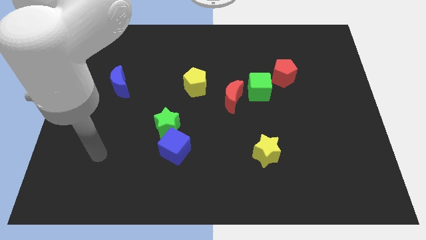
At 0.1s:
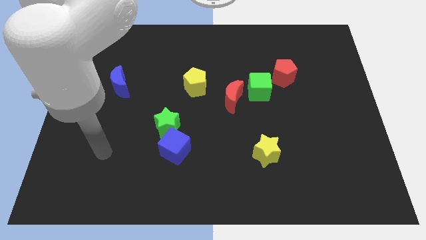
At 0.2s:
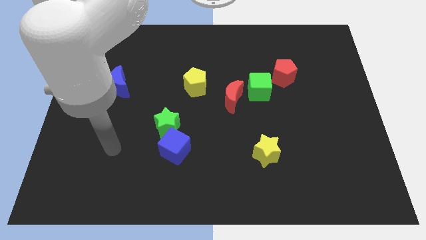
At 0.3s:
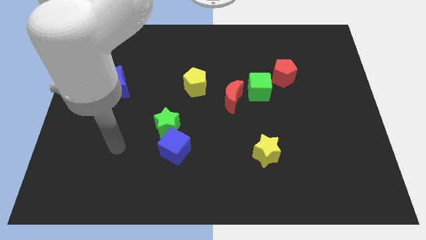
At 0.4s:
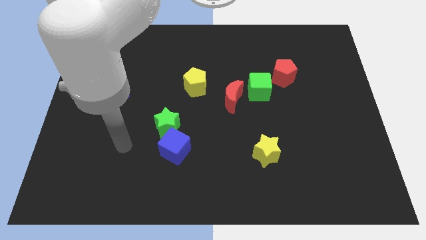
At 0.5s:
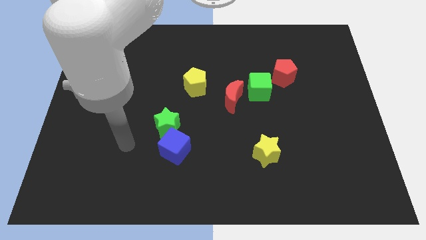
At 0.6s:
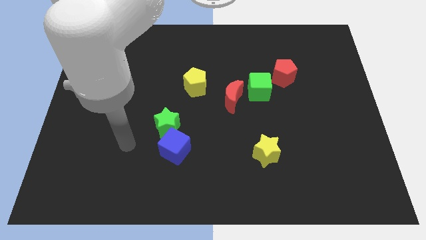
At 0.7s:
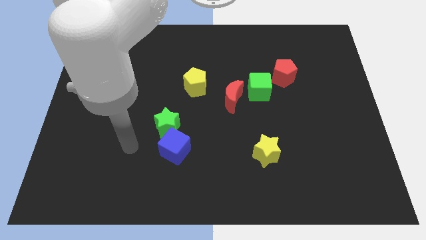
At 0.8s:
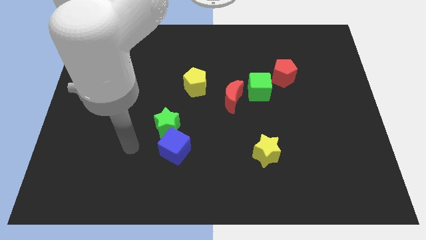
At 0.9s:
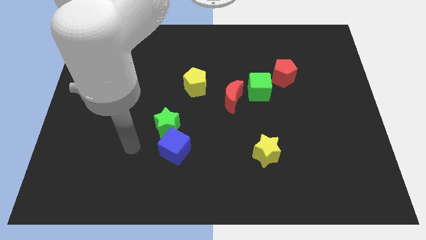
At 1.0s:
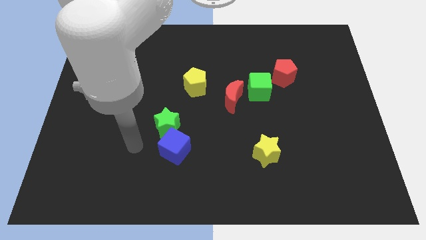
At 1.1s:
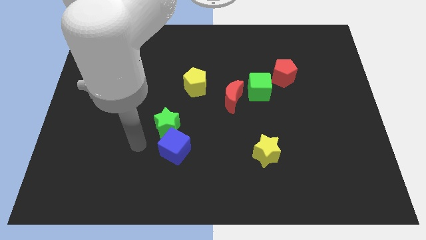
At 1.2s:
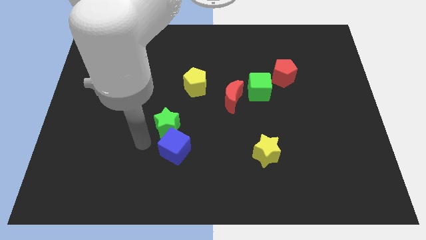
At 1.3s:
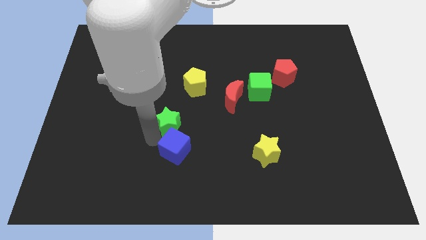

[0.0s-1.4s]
move your arm to the bottom left of the green star

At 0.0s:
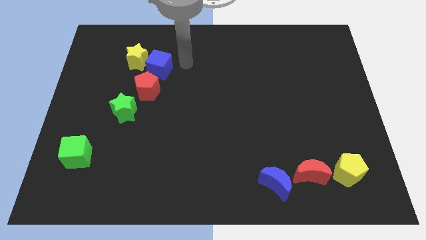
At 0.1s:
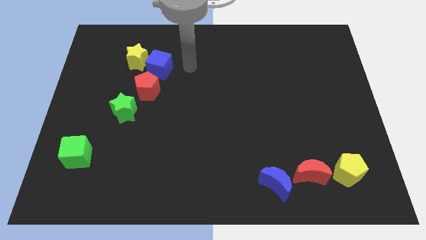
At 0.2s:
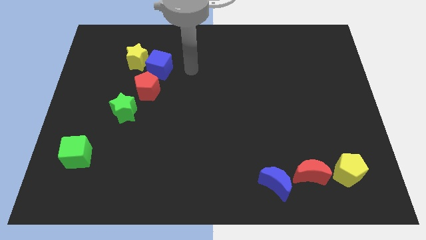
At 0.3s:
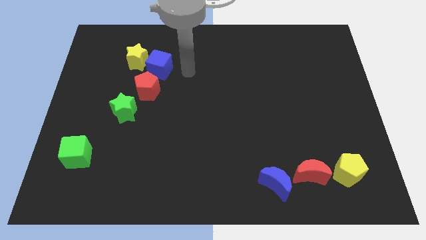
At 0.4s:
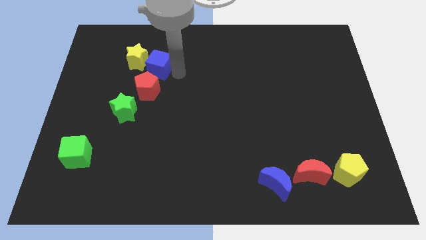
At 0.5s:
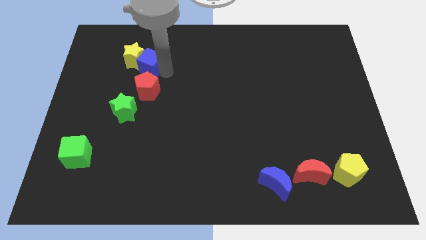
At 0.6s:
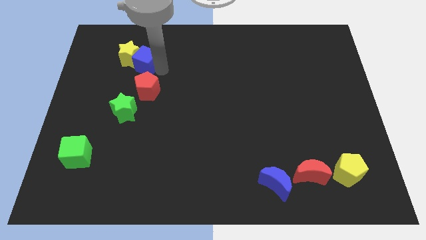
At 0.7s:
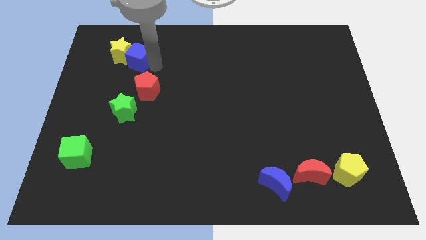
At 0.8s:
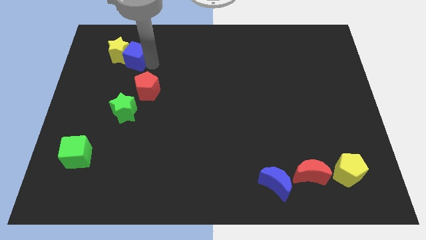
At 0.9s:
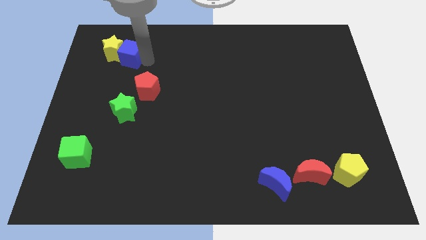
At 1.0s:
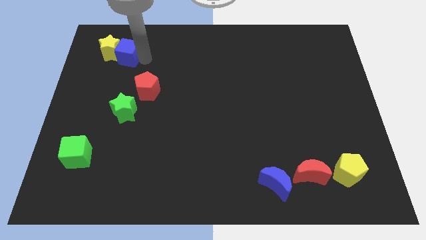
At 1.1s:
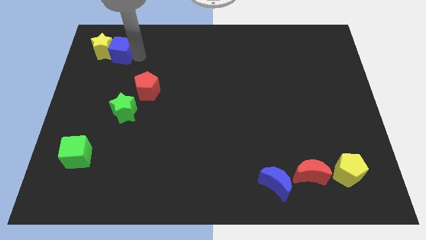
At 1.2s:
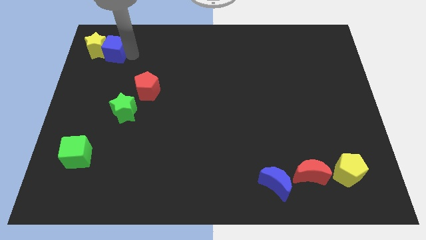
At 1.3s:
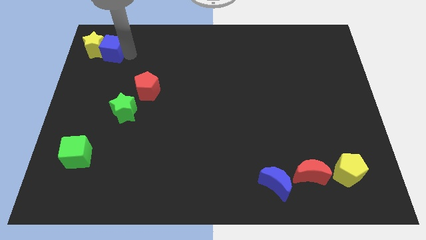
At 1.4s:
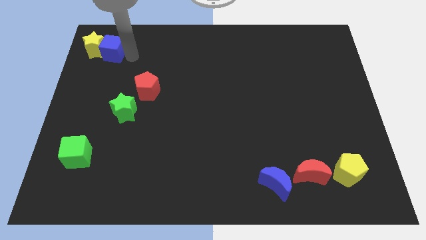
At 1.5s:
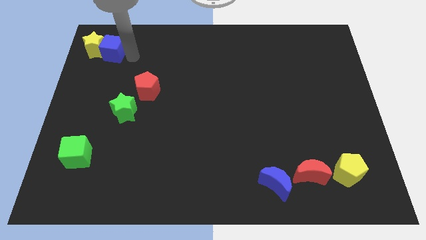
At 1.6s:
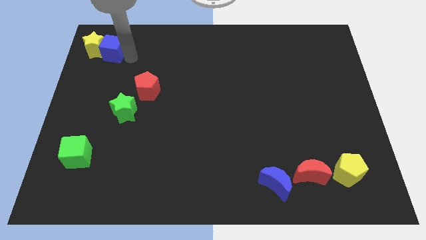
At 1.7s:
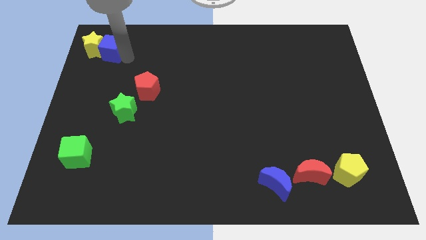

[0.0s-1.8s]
push yellow star with blue cube

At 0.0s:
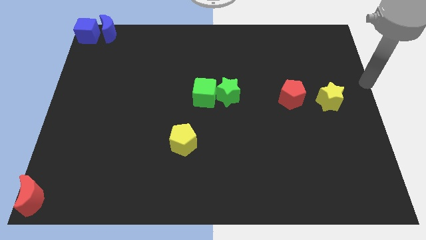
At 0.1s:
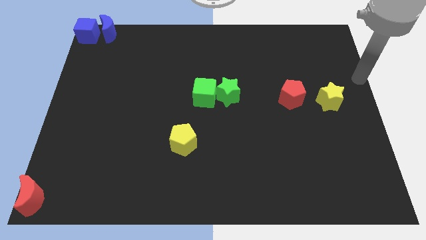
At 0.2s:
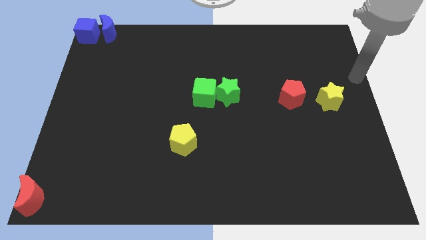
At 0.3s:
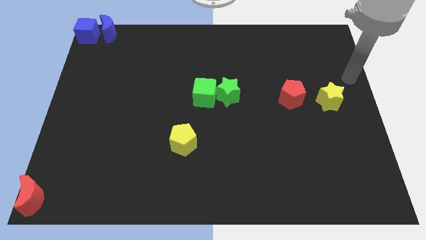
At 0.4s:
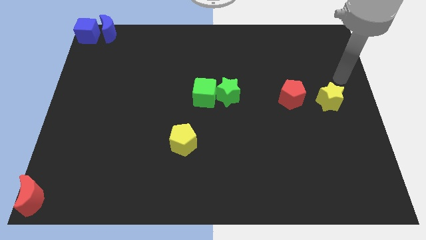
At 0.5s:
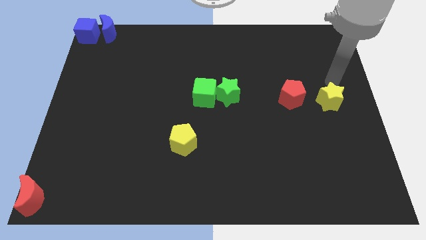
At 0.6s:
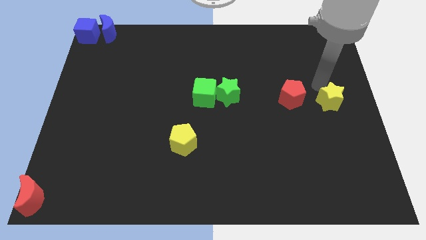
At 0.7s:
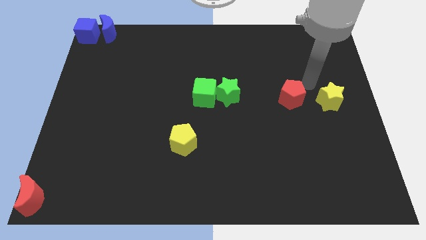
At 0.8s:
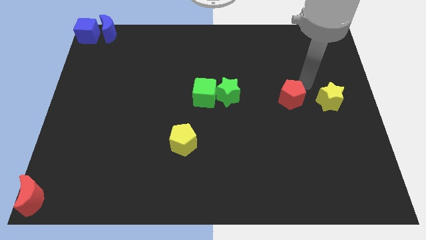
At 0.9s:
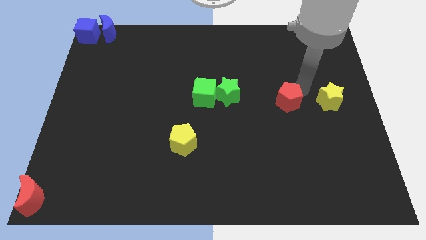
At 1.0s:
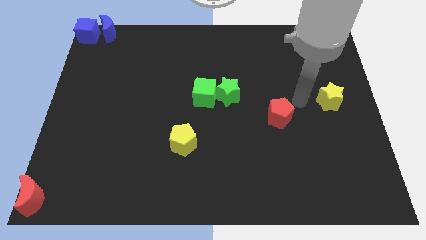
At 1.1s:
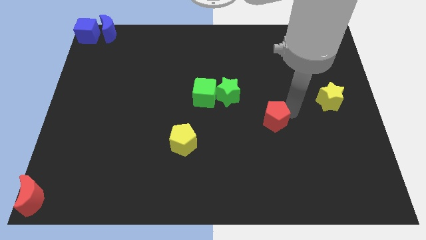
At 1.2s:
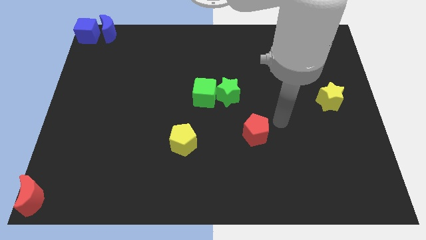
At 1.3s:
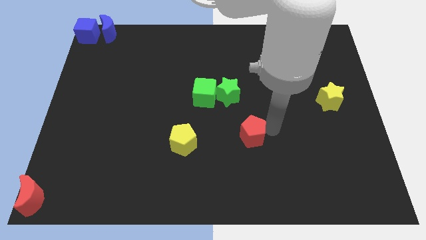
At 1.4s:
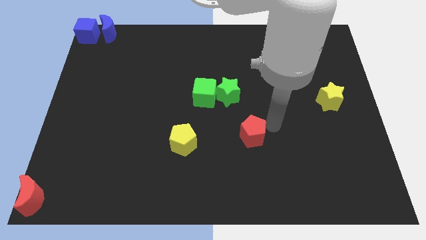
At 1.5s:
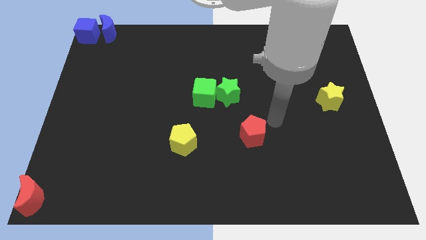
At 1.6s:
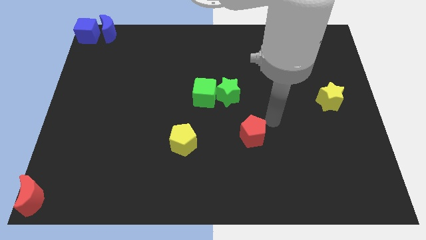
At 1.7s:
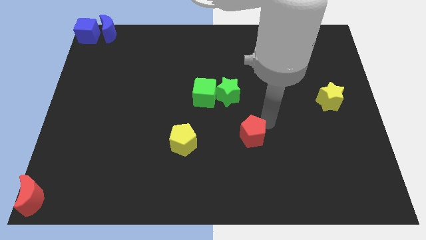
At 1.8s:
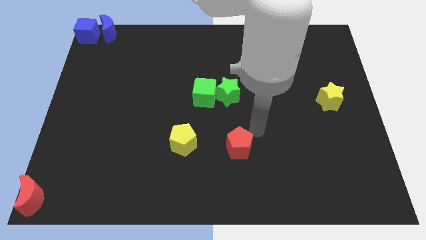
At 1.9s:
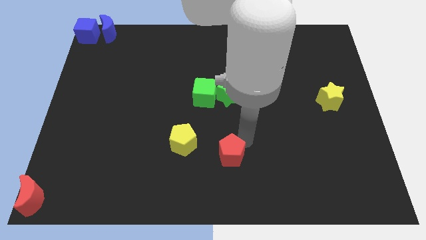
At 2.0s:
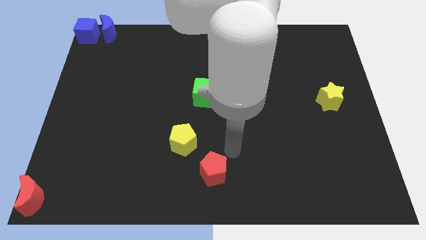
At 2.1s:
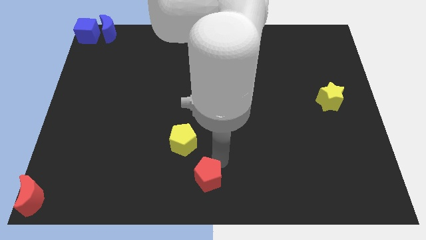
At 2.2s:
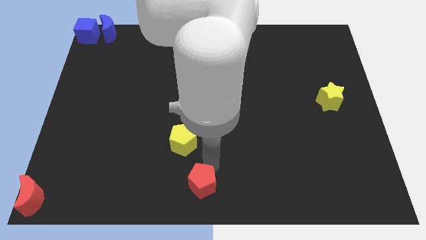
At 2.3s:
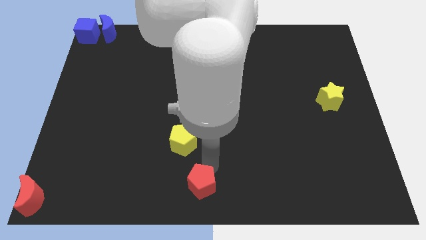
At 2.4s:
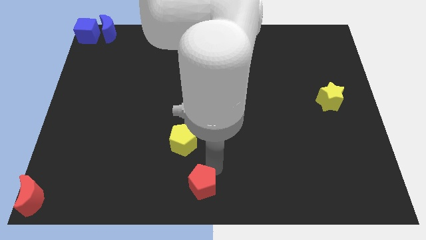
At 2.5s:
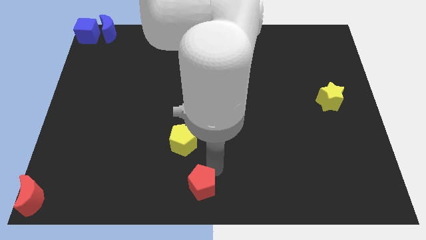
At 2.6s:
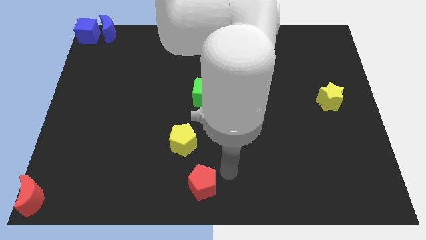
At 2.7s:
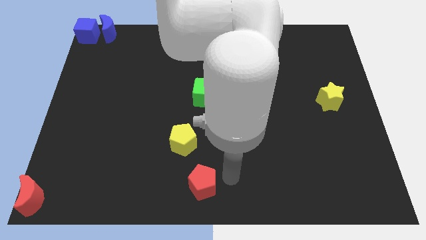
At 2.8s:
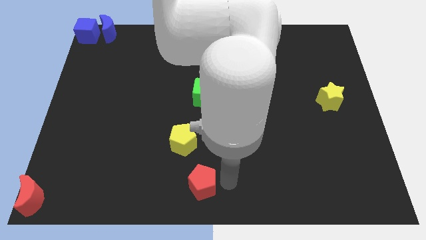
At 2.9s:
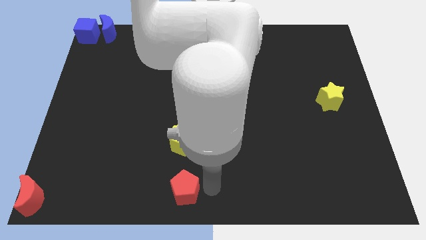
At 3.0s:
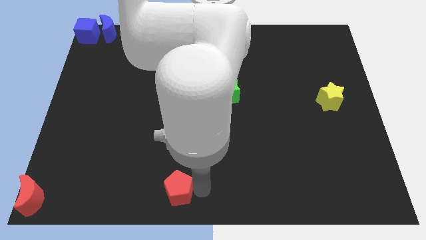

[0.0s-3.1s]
push the red pentagon to the bottom side of the yellow pentagon

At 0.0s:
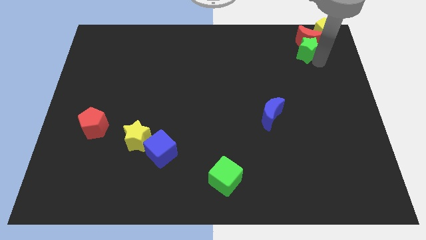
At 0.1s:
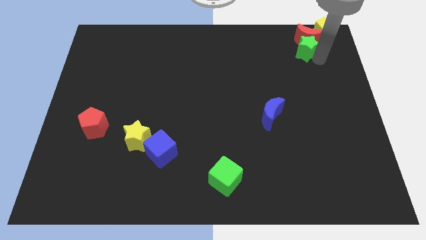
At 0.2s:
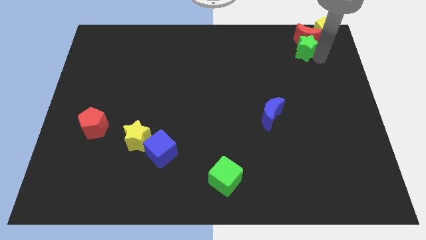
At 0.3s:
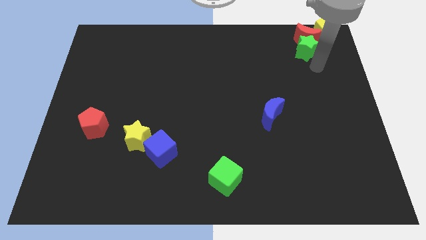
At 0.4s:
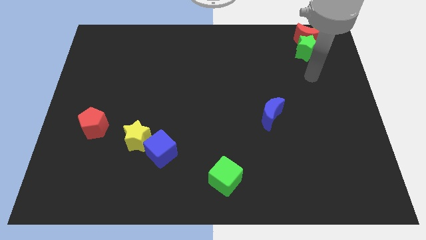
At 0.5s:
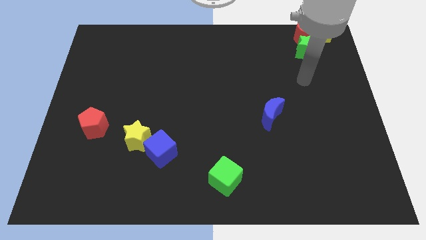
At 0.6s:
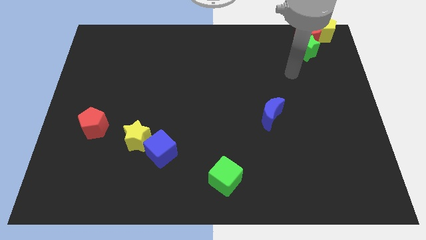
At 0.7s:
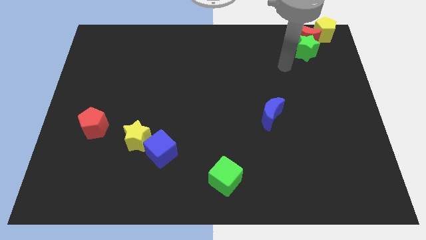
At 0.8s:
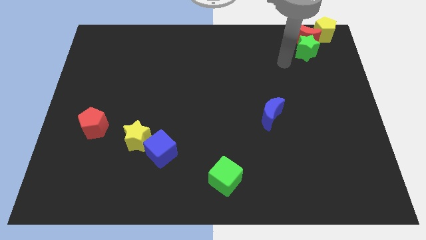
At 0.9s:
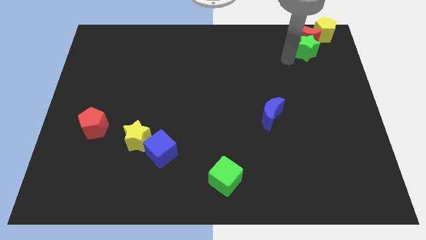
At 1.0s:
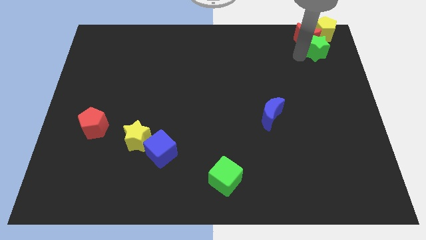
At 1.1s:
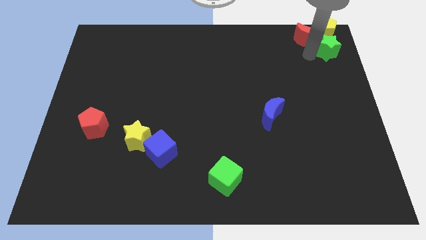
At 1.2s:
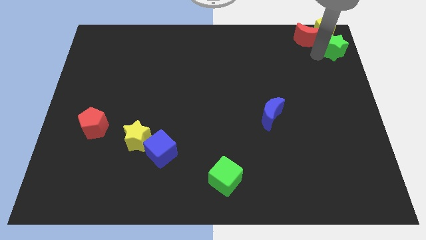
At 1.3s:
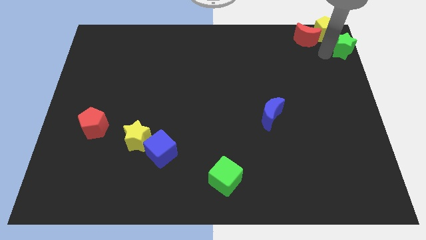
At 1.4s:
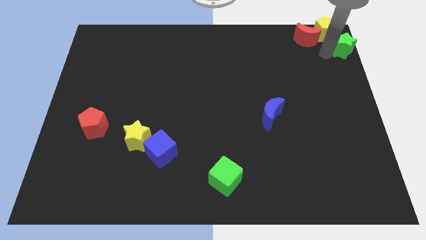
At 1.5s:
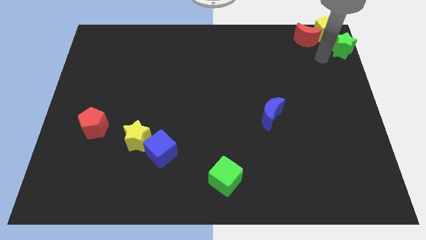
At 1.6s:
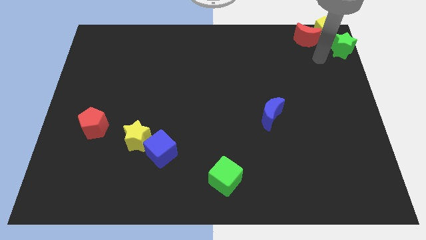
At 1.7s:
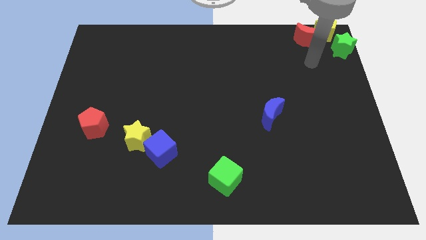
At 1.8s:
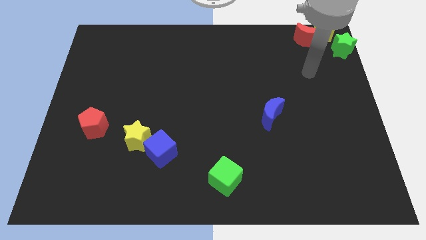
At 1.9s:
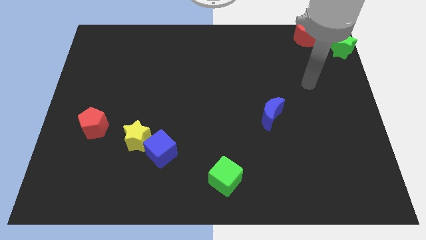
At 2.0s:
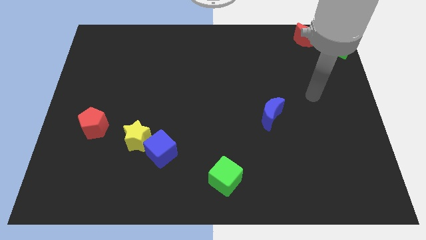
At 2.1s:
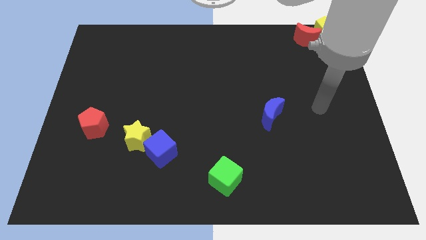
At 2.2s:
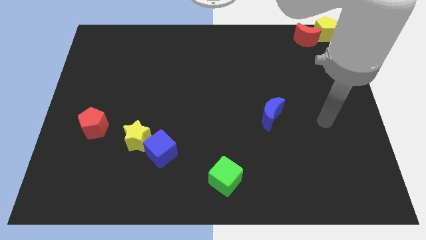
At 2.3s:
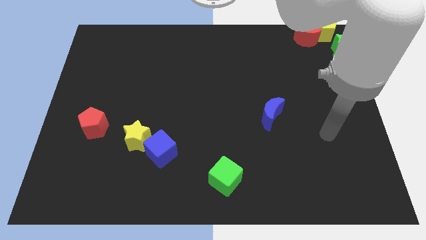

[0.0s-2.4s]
move green star towards top right corner of the board

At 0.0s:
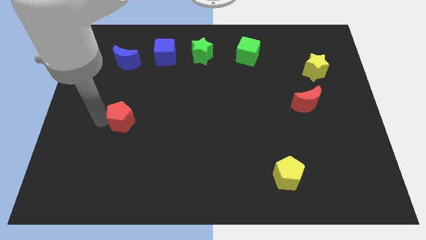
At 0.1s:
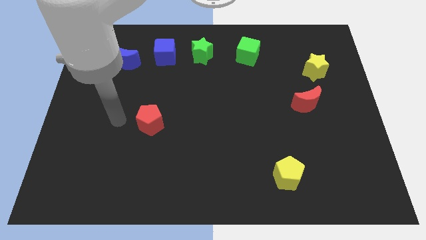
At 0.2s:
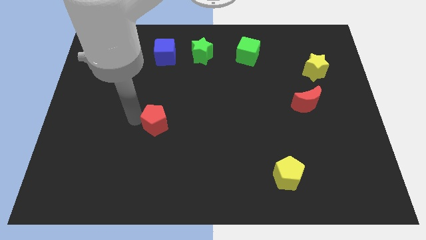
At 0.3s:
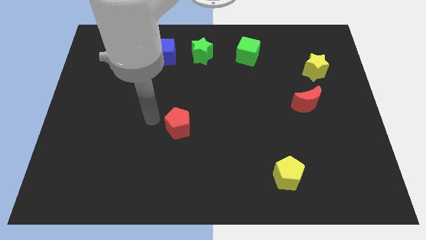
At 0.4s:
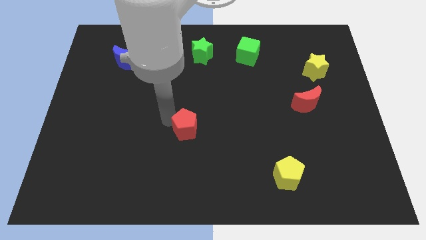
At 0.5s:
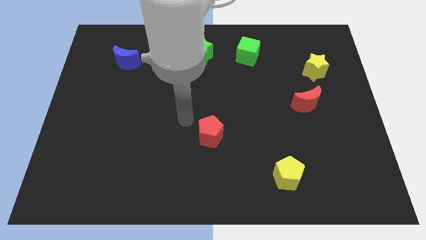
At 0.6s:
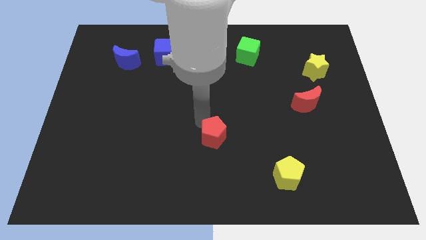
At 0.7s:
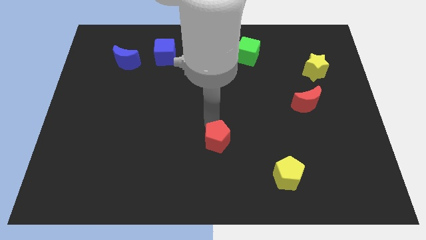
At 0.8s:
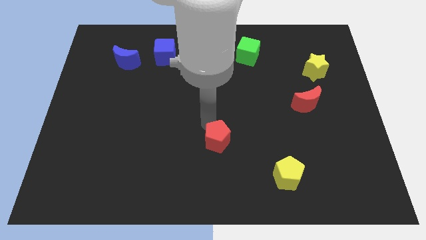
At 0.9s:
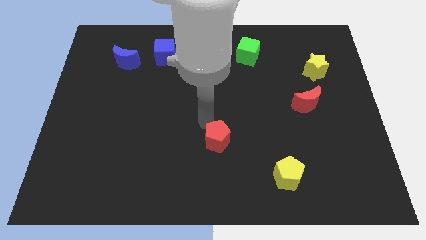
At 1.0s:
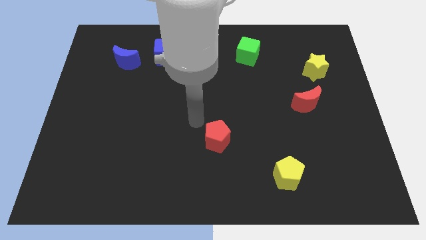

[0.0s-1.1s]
move the red pentagon diagonal to the yellow pentagon
